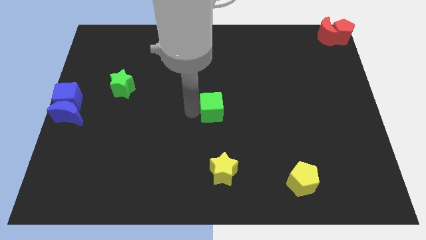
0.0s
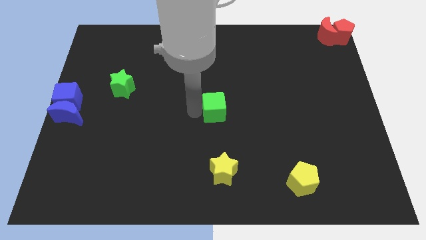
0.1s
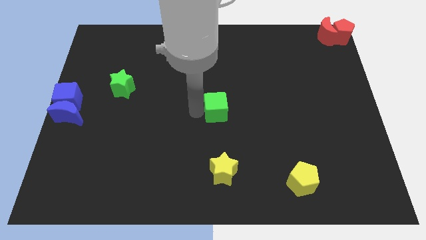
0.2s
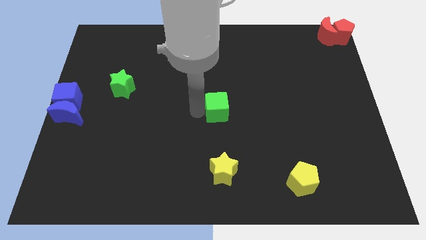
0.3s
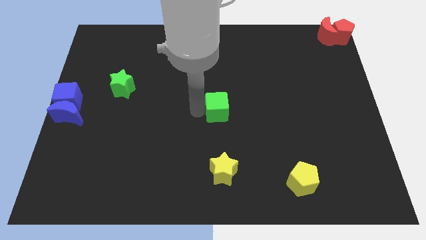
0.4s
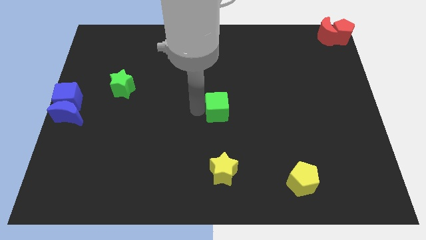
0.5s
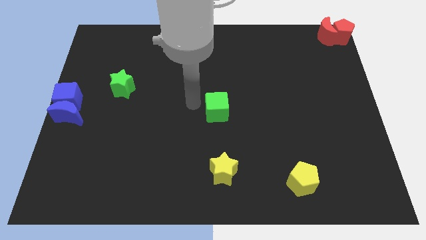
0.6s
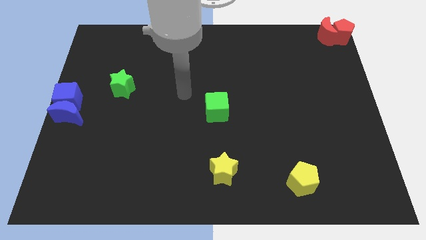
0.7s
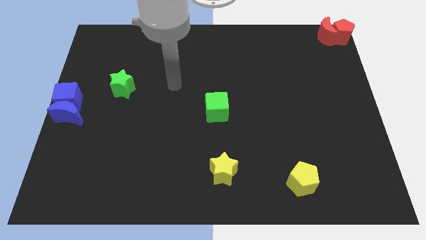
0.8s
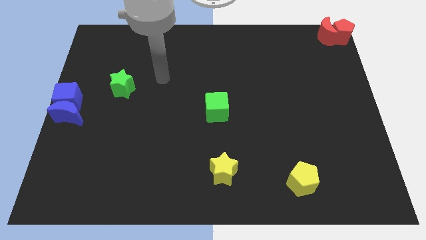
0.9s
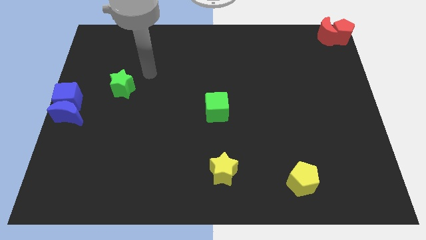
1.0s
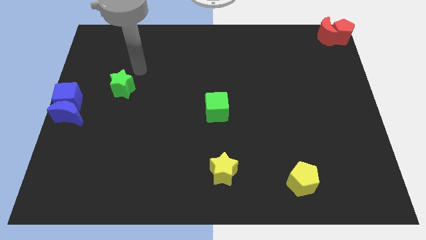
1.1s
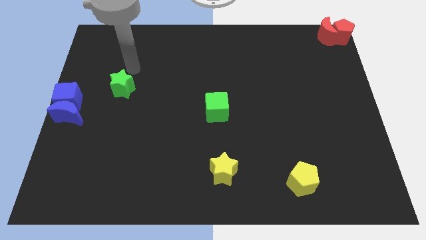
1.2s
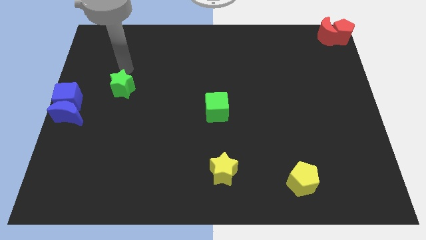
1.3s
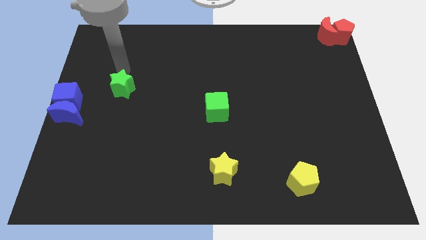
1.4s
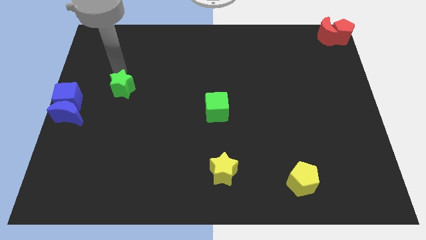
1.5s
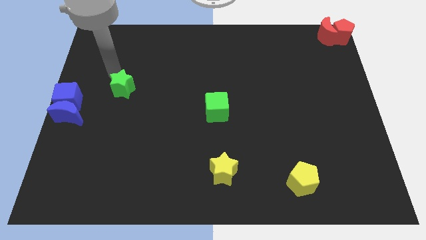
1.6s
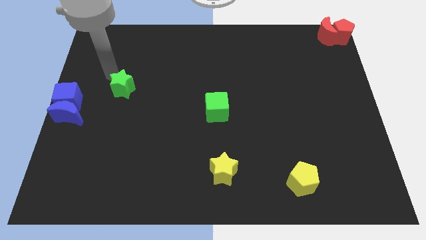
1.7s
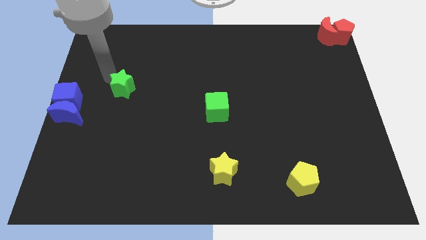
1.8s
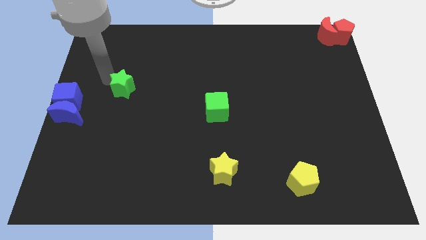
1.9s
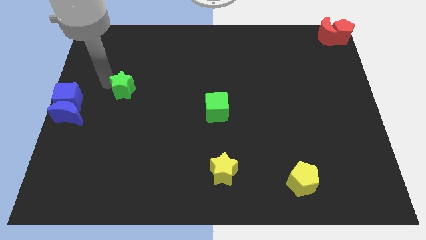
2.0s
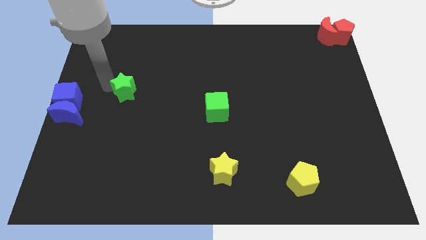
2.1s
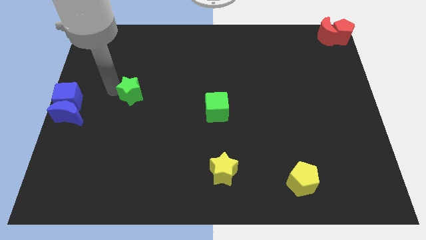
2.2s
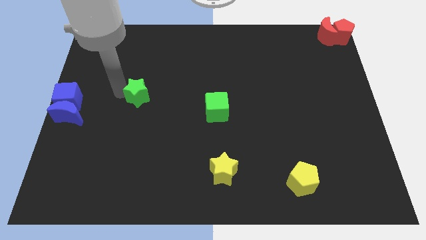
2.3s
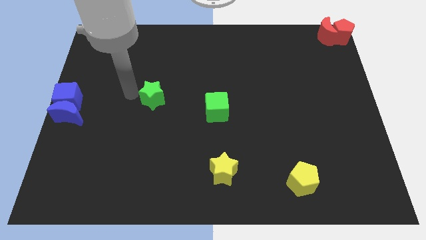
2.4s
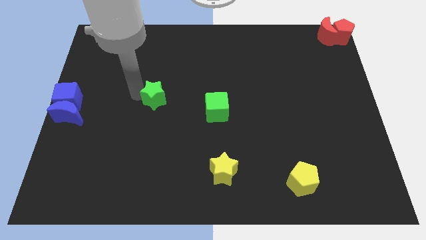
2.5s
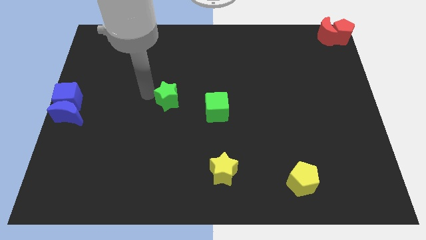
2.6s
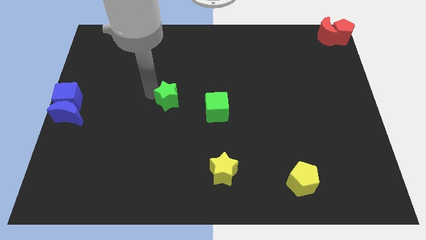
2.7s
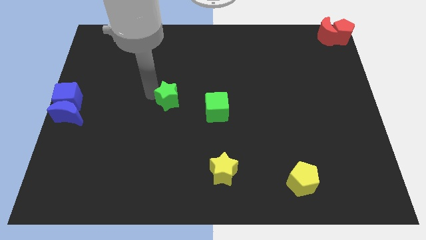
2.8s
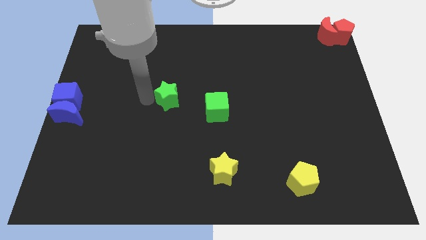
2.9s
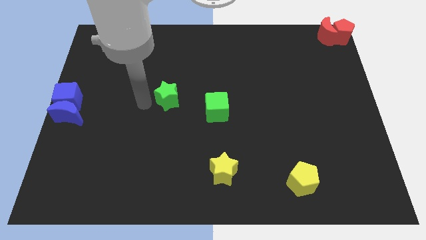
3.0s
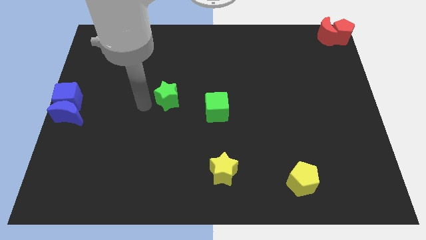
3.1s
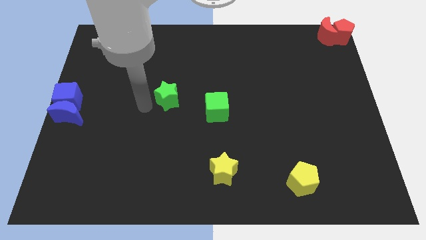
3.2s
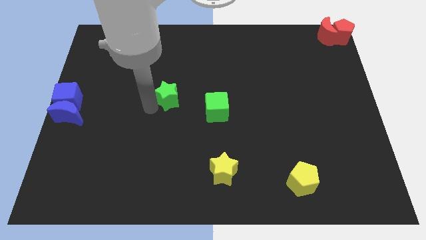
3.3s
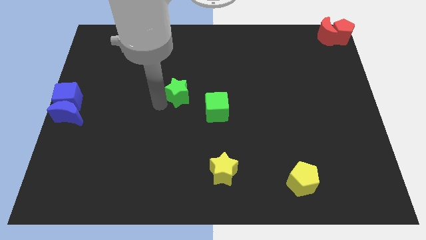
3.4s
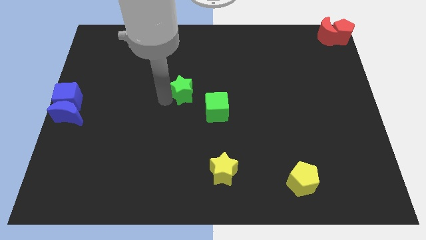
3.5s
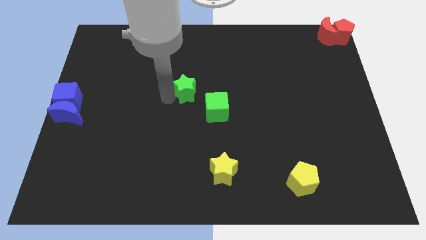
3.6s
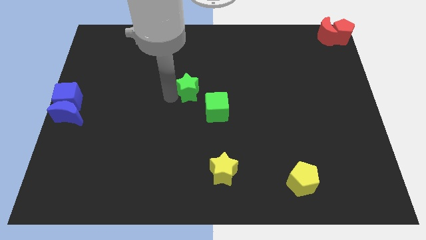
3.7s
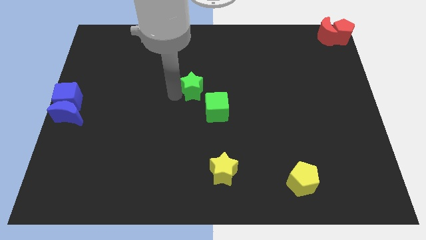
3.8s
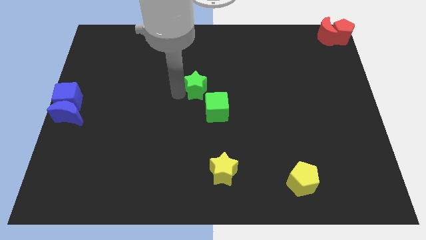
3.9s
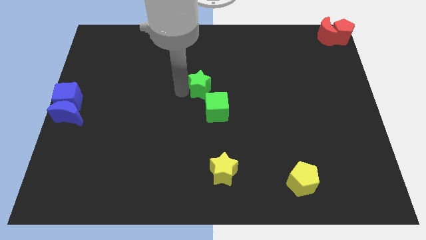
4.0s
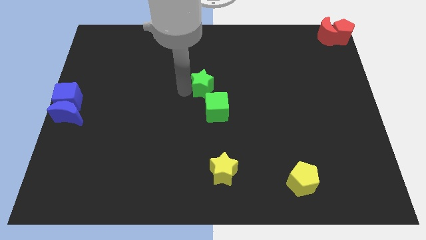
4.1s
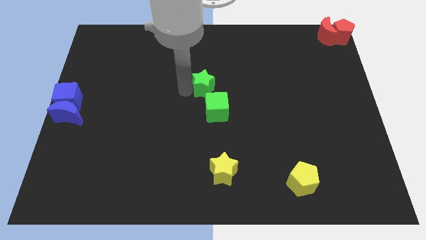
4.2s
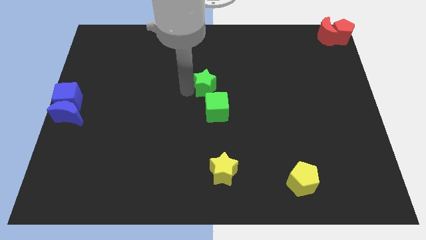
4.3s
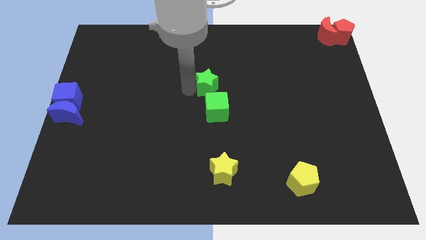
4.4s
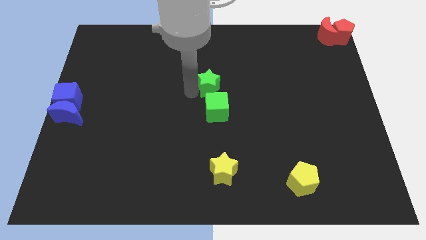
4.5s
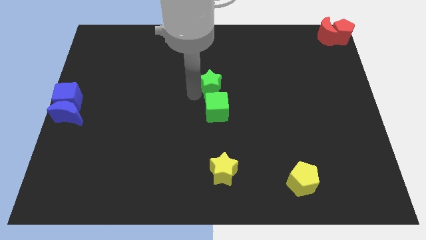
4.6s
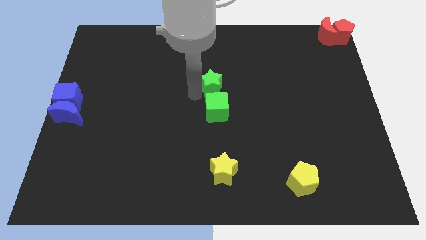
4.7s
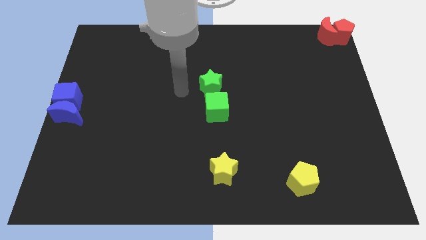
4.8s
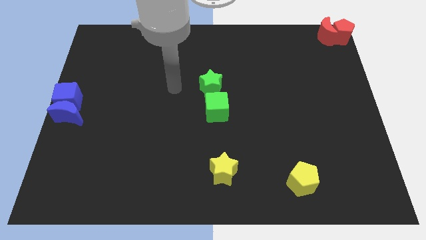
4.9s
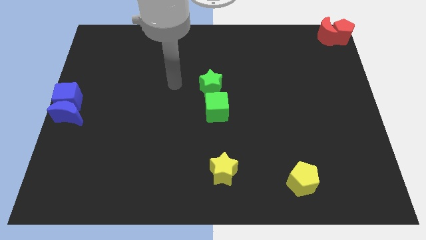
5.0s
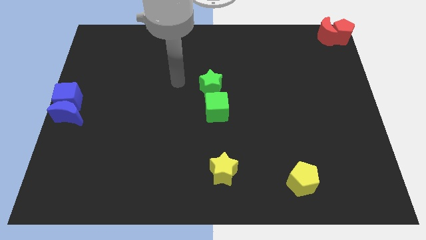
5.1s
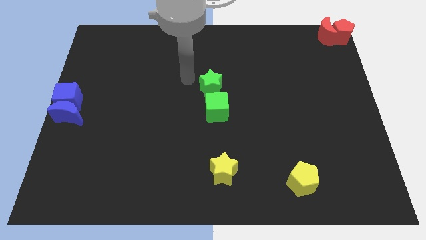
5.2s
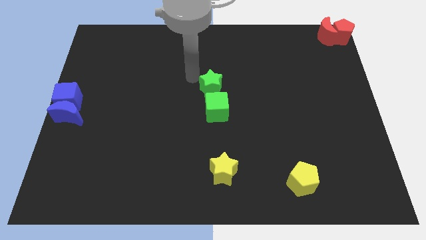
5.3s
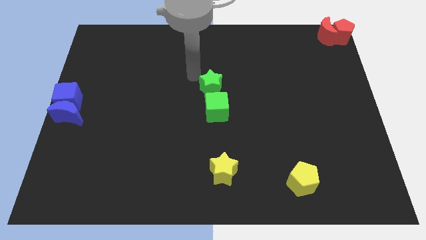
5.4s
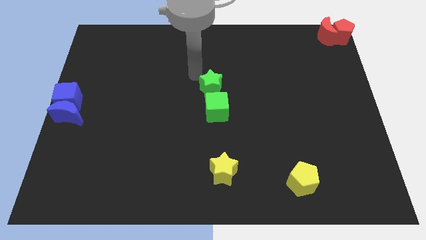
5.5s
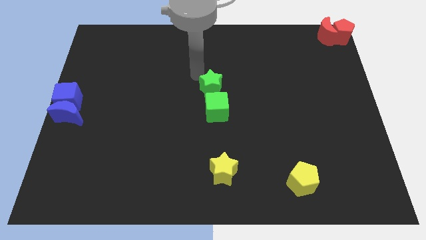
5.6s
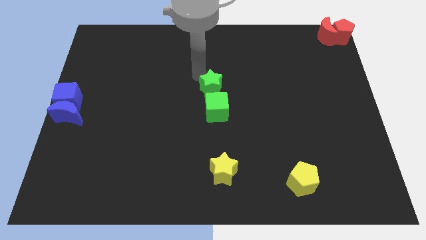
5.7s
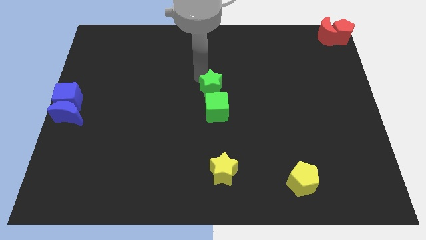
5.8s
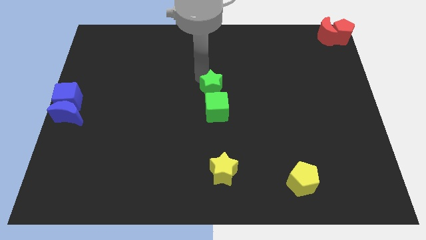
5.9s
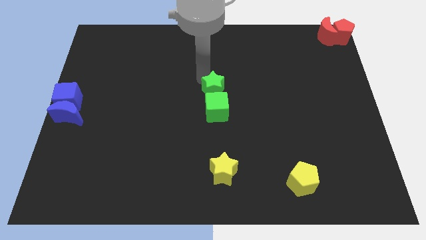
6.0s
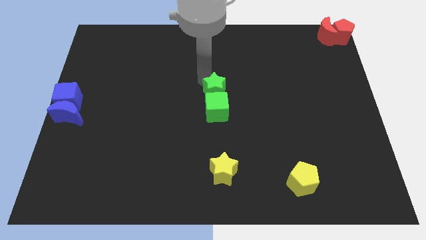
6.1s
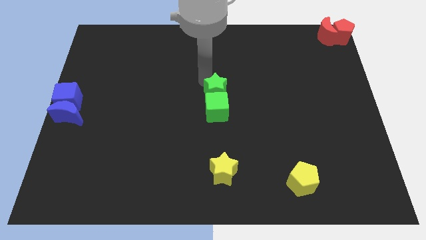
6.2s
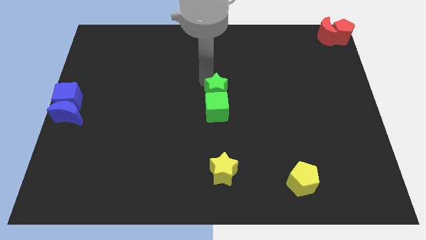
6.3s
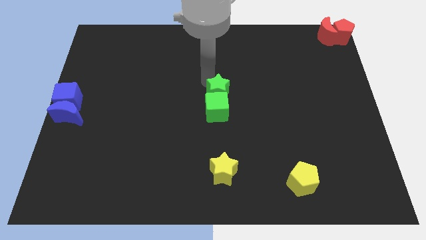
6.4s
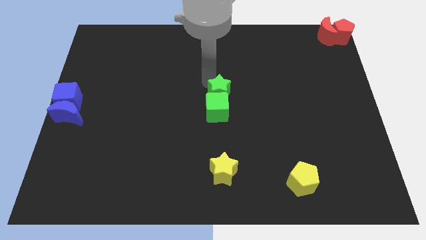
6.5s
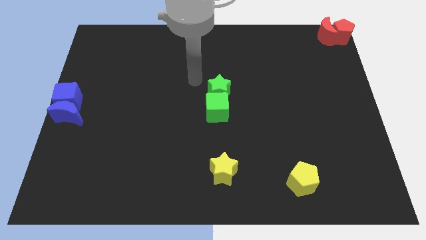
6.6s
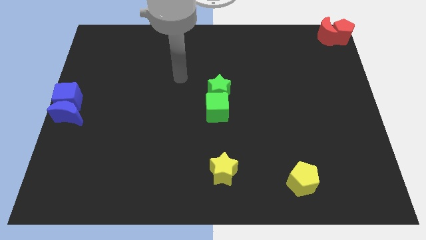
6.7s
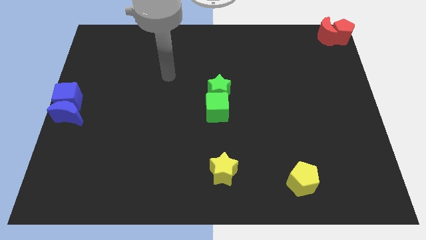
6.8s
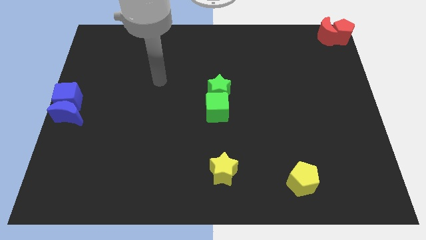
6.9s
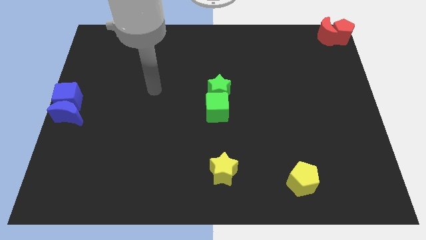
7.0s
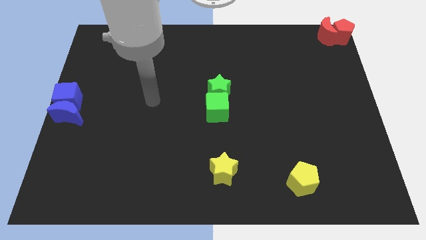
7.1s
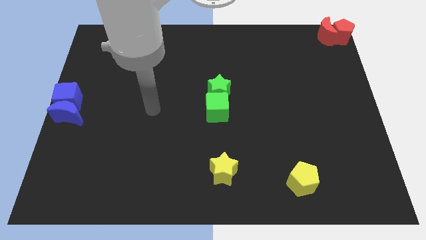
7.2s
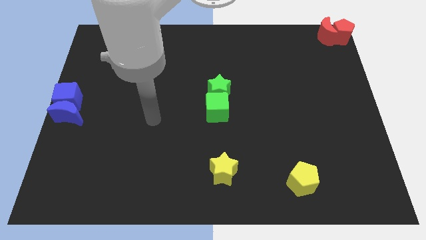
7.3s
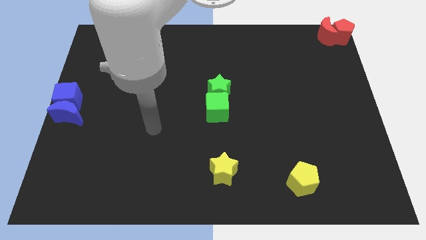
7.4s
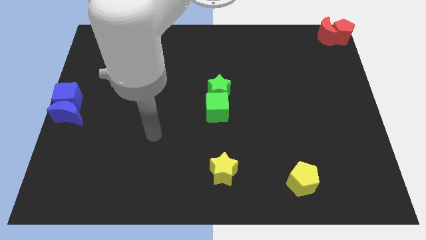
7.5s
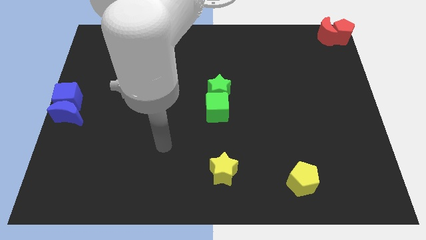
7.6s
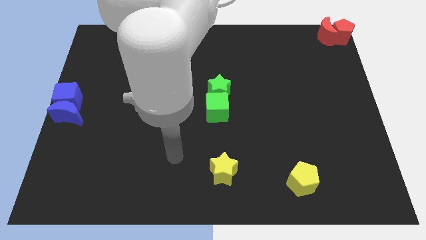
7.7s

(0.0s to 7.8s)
place the green star above the green cube

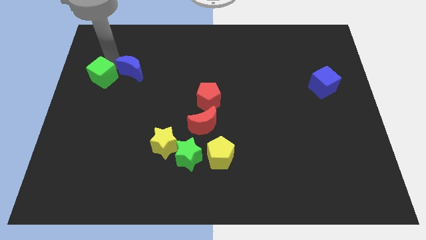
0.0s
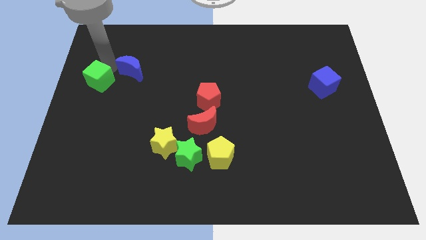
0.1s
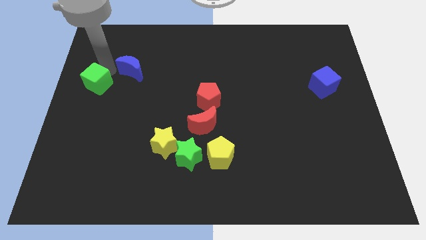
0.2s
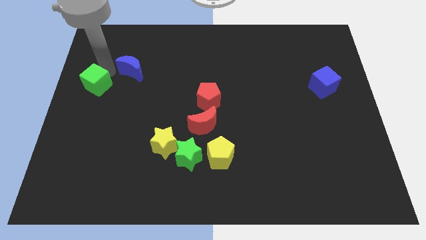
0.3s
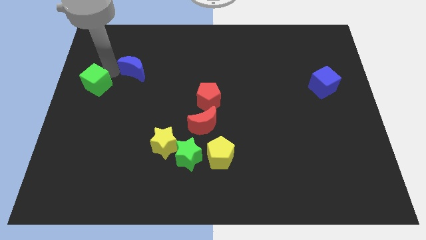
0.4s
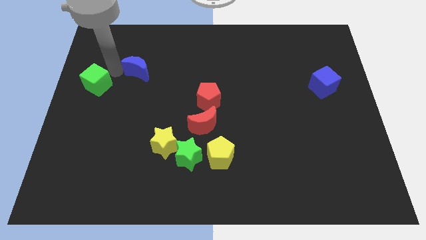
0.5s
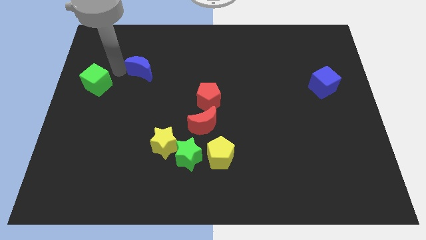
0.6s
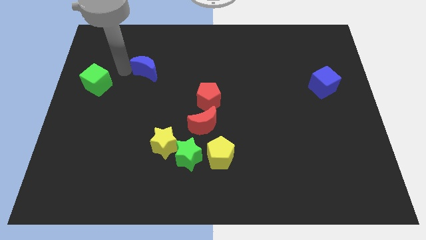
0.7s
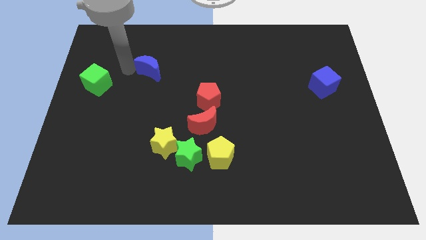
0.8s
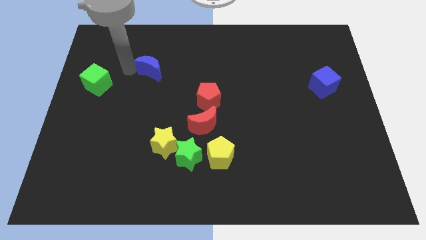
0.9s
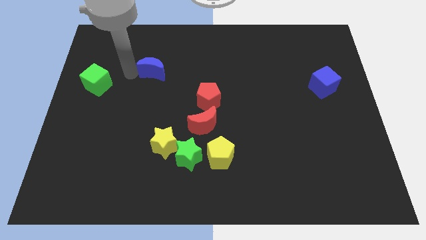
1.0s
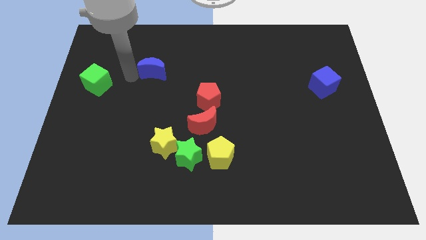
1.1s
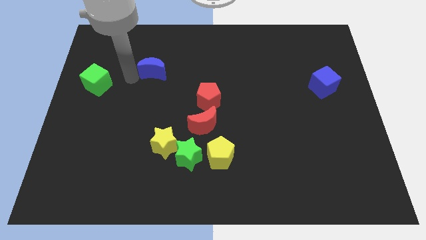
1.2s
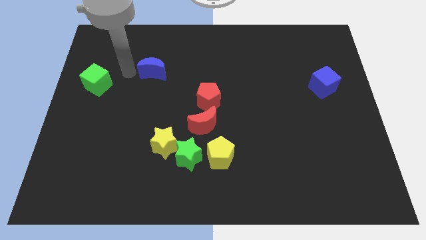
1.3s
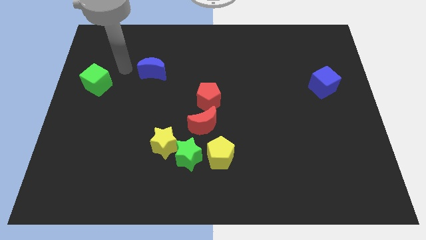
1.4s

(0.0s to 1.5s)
move the green cube and the blue crescent apart
